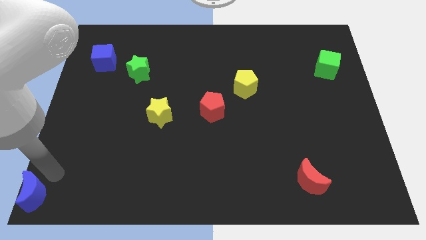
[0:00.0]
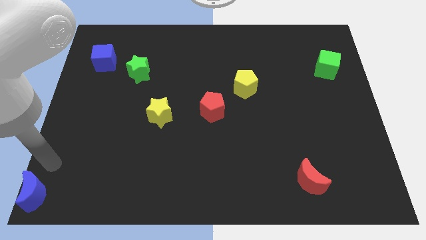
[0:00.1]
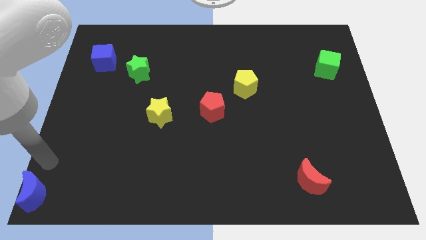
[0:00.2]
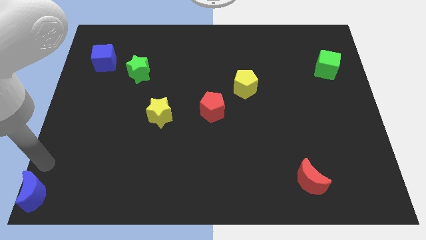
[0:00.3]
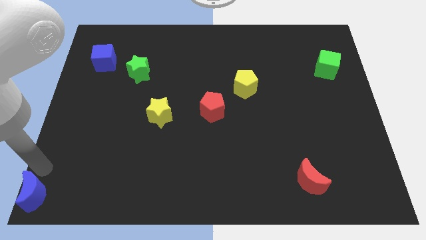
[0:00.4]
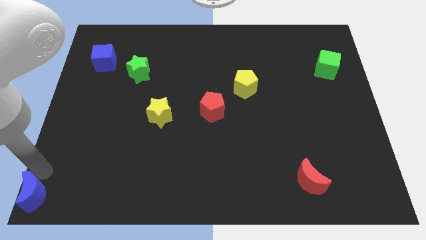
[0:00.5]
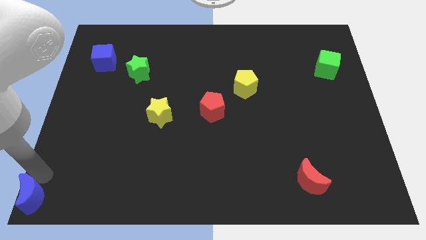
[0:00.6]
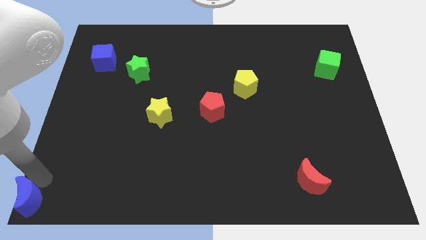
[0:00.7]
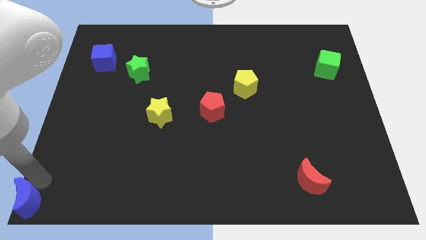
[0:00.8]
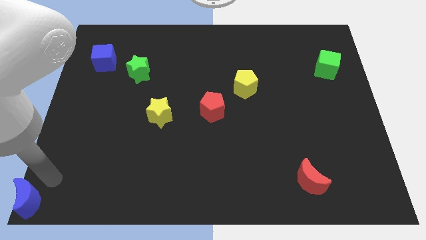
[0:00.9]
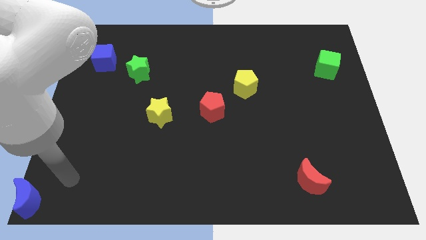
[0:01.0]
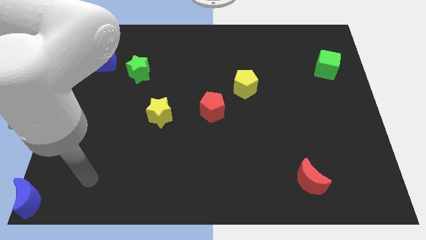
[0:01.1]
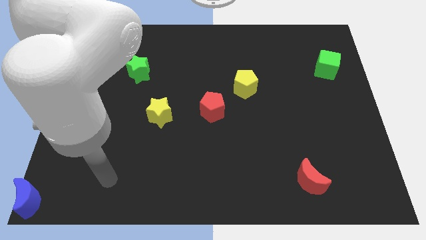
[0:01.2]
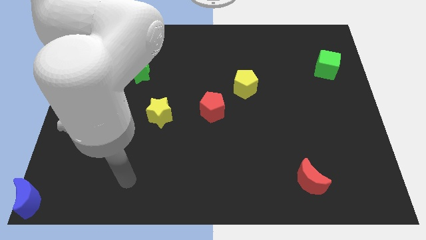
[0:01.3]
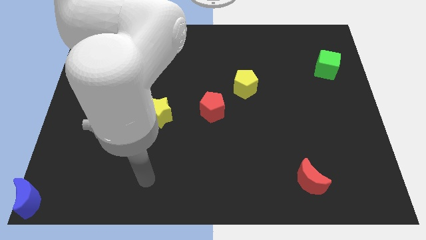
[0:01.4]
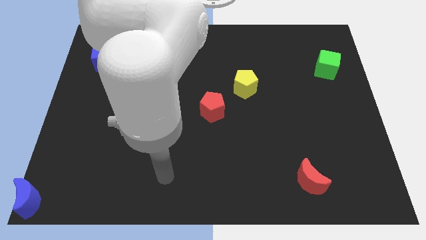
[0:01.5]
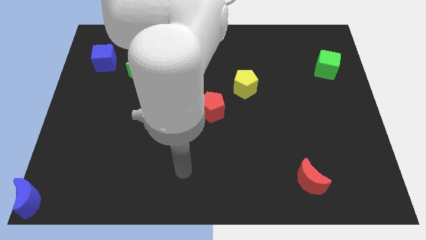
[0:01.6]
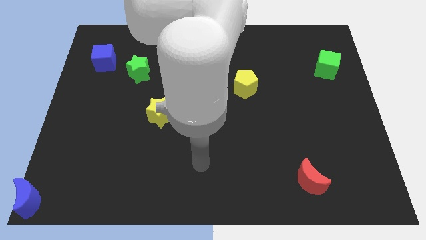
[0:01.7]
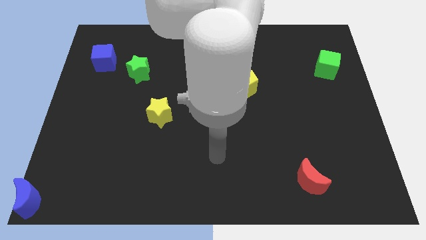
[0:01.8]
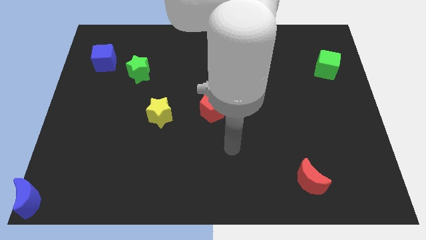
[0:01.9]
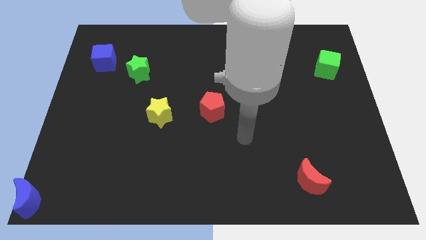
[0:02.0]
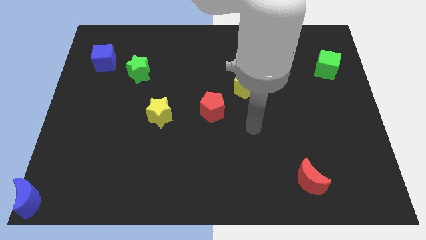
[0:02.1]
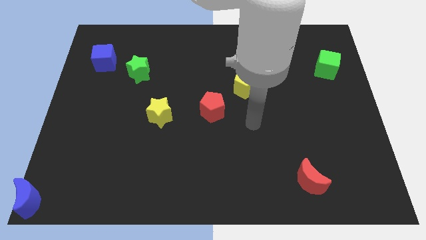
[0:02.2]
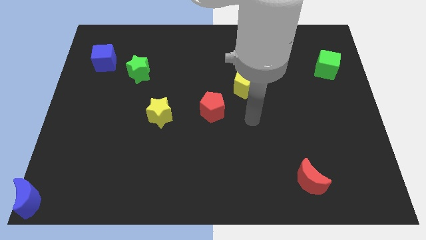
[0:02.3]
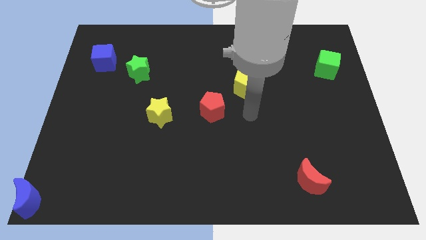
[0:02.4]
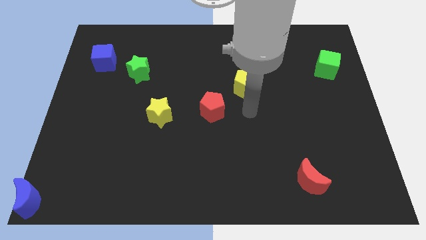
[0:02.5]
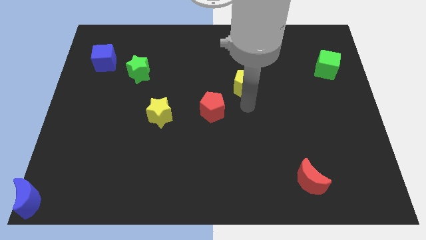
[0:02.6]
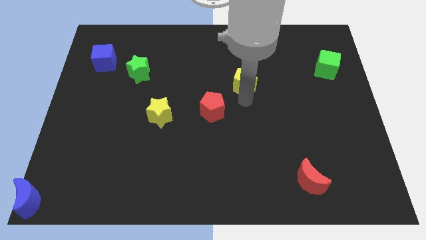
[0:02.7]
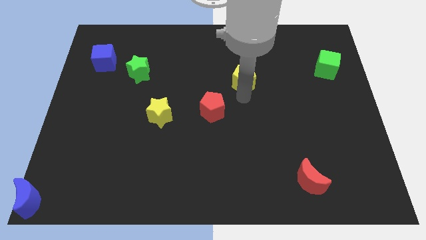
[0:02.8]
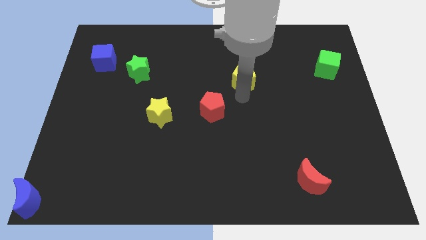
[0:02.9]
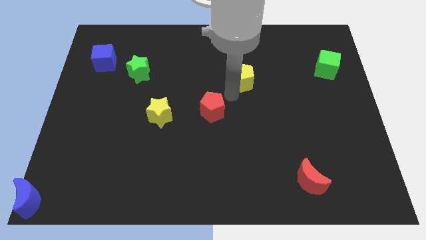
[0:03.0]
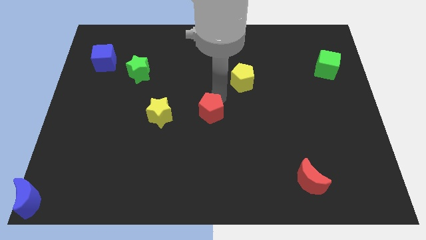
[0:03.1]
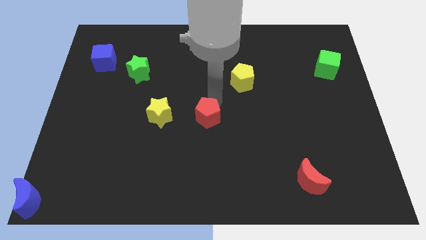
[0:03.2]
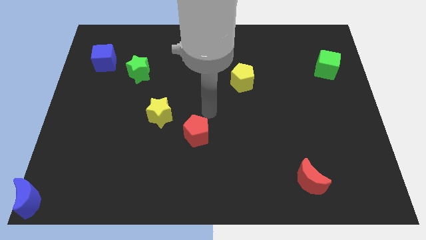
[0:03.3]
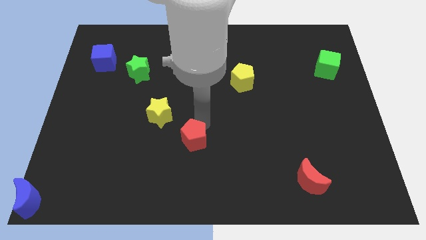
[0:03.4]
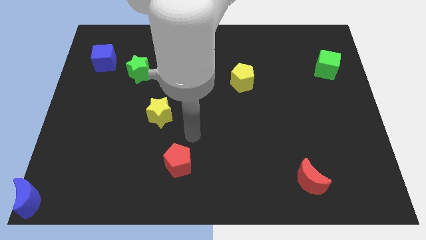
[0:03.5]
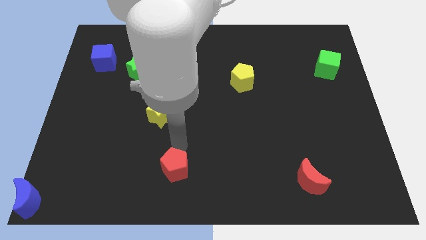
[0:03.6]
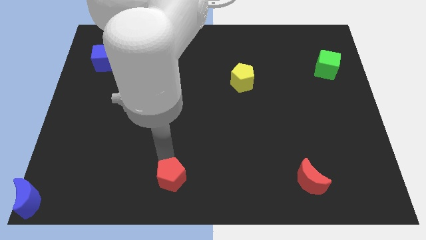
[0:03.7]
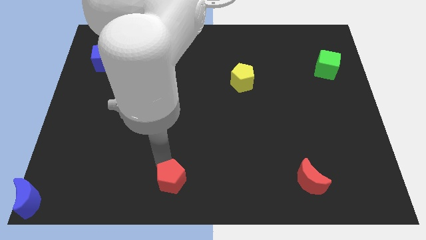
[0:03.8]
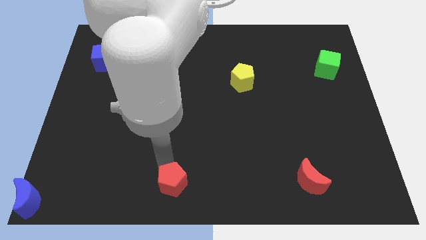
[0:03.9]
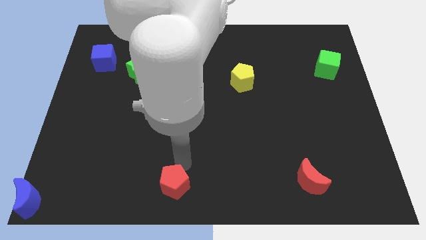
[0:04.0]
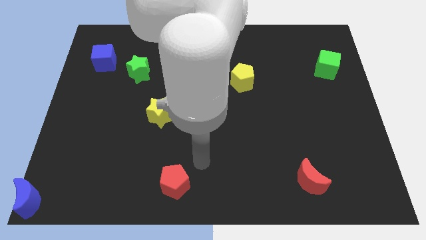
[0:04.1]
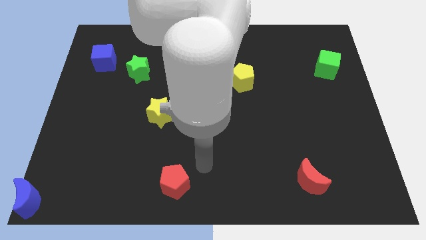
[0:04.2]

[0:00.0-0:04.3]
place the red pentagon in between the blue moon and red moon

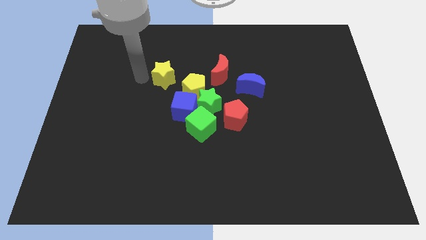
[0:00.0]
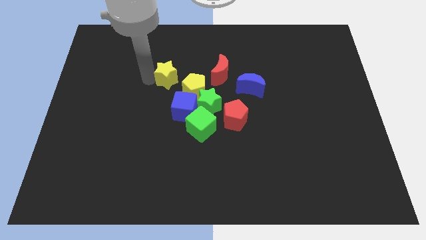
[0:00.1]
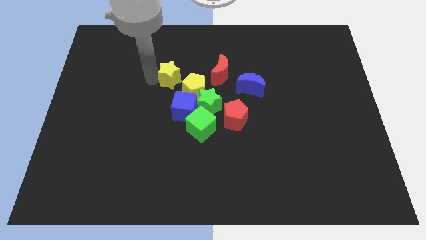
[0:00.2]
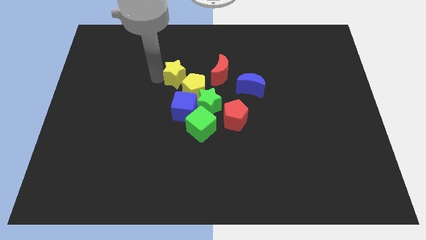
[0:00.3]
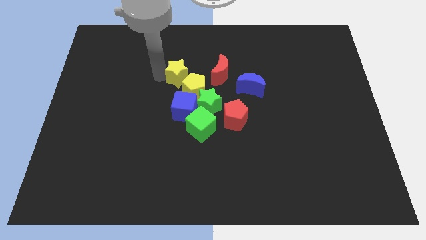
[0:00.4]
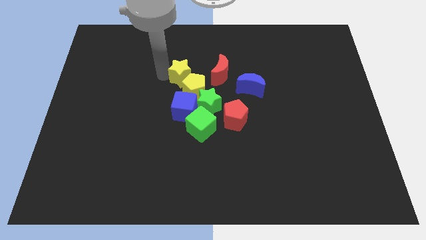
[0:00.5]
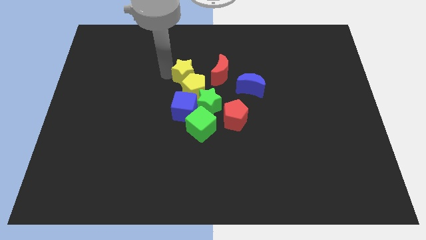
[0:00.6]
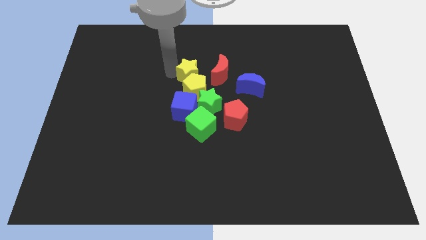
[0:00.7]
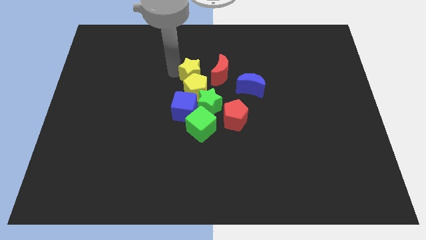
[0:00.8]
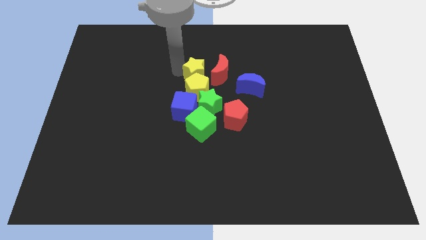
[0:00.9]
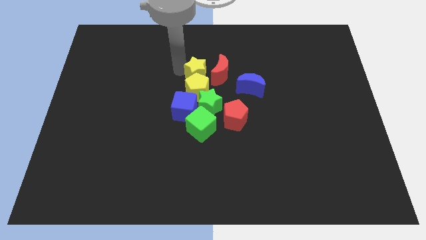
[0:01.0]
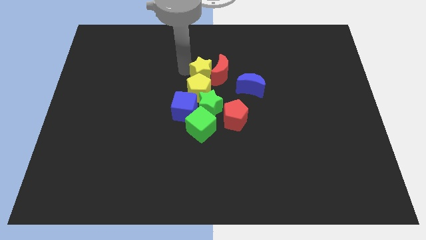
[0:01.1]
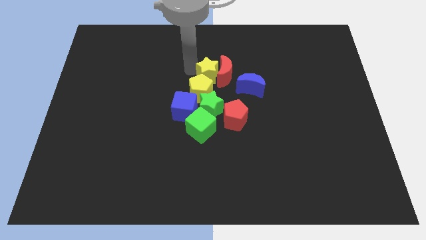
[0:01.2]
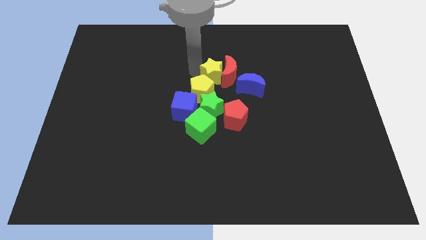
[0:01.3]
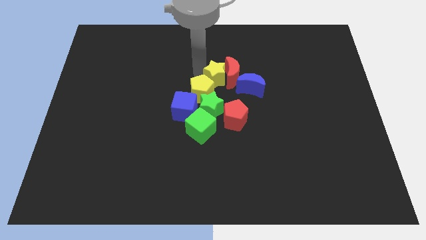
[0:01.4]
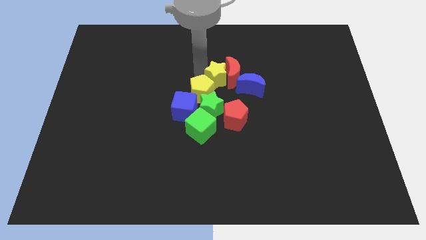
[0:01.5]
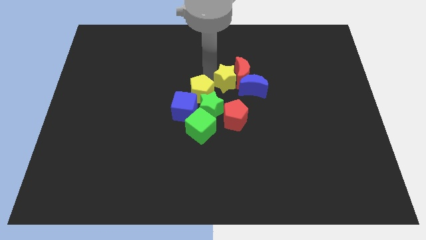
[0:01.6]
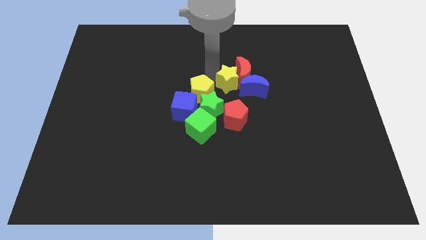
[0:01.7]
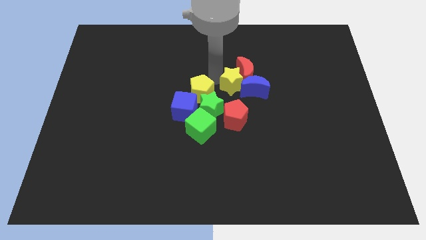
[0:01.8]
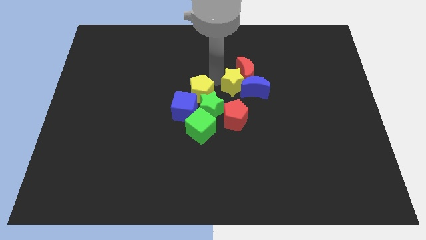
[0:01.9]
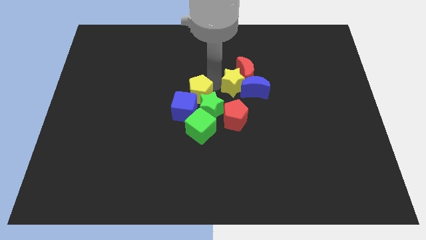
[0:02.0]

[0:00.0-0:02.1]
push the yellow star into the group of blocks

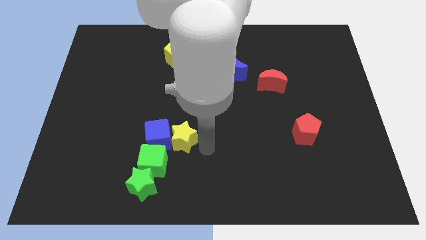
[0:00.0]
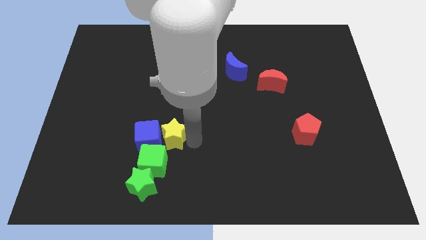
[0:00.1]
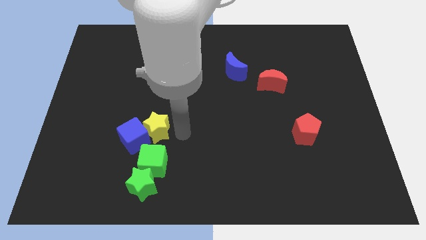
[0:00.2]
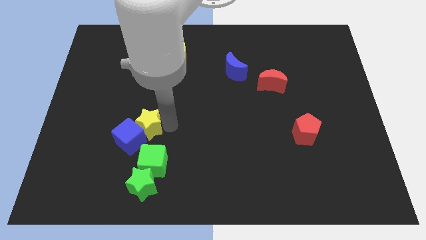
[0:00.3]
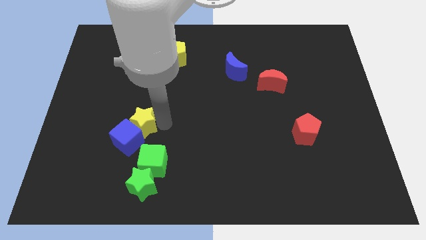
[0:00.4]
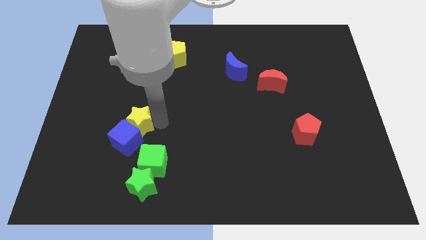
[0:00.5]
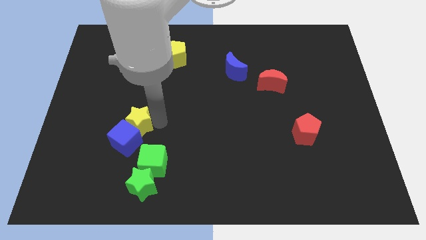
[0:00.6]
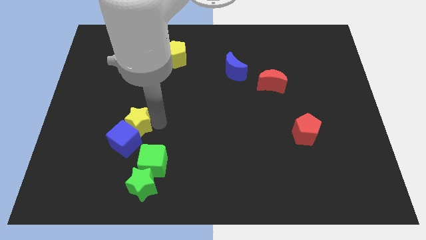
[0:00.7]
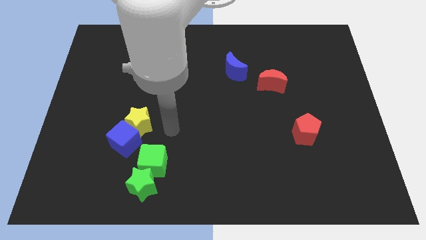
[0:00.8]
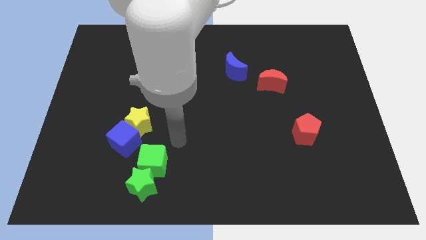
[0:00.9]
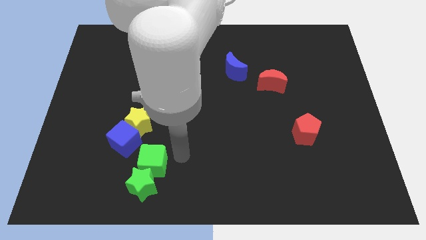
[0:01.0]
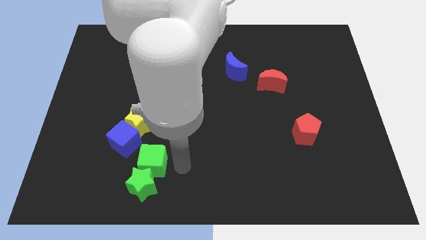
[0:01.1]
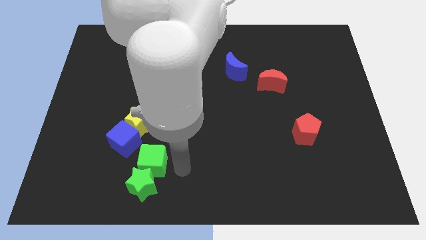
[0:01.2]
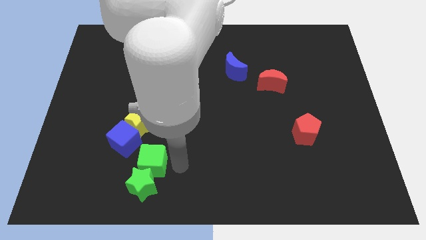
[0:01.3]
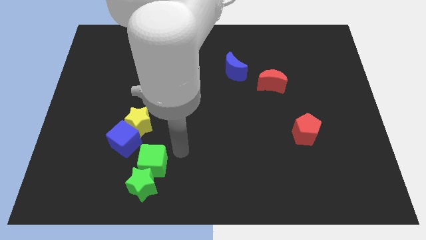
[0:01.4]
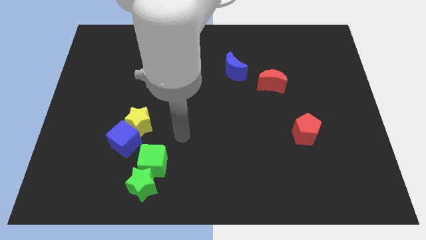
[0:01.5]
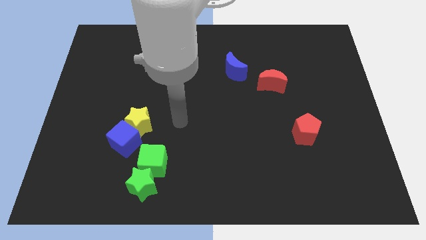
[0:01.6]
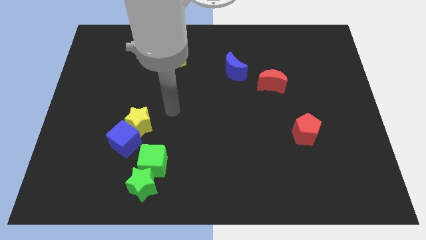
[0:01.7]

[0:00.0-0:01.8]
place the yellow star above the blue cube

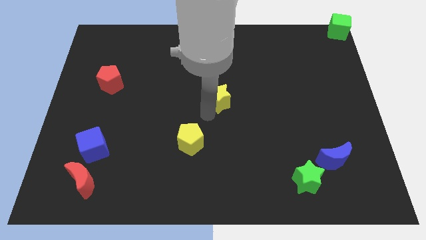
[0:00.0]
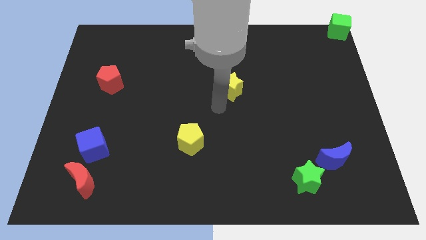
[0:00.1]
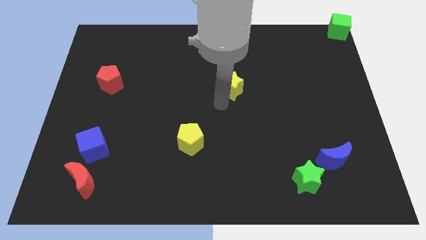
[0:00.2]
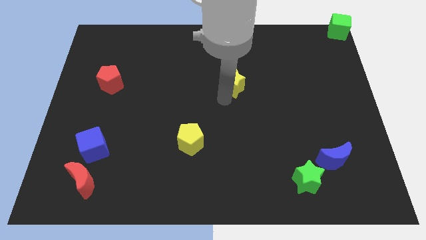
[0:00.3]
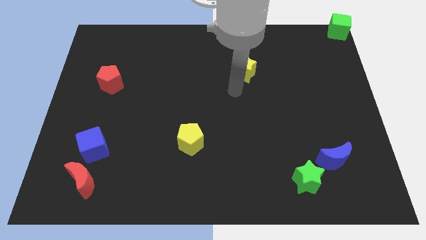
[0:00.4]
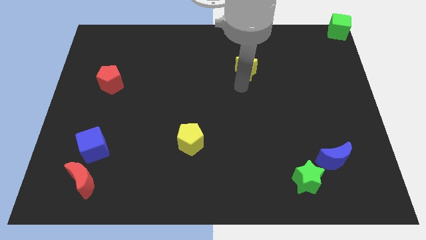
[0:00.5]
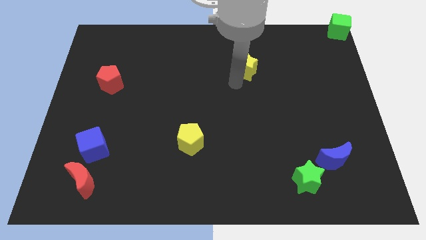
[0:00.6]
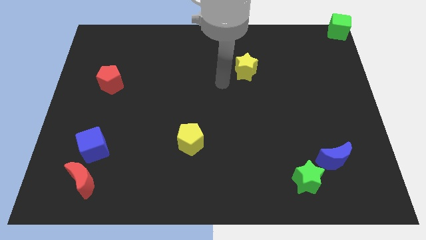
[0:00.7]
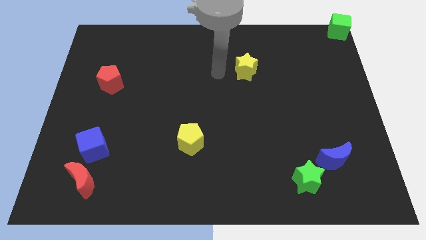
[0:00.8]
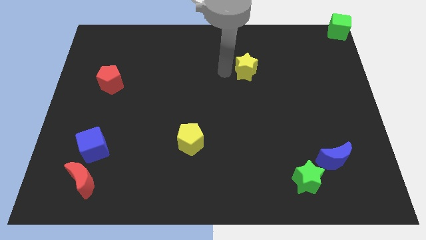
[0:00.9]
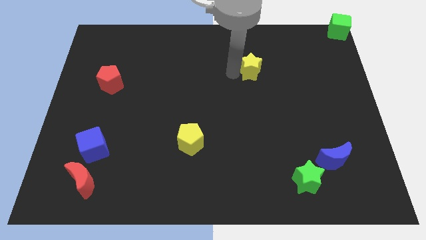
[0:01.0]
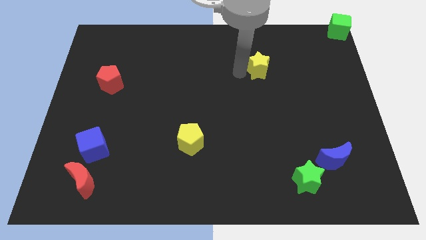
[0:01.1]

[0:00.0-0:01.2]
move the yellow star towards the top right side of the board
